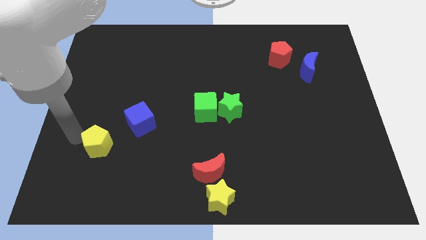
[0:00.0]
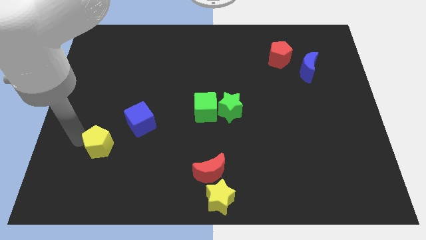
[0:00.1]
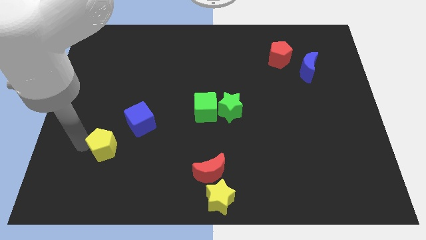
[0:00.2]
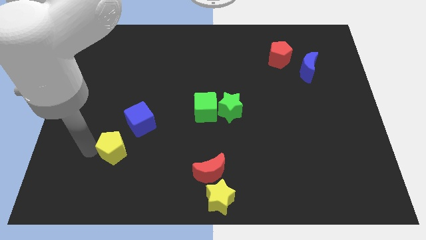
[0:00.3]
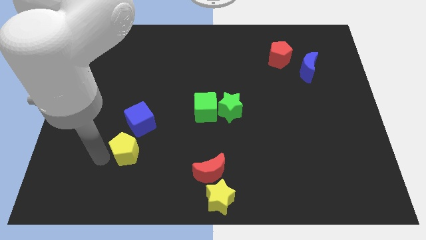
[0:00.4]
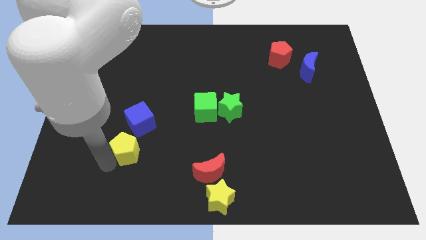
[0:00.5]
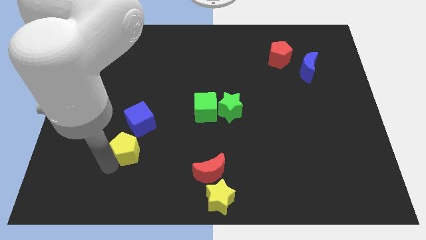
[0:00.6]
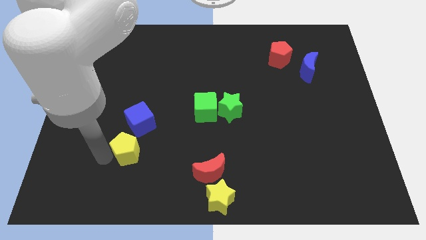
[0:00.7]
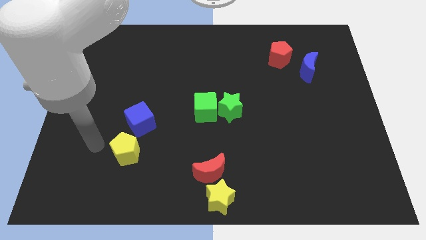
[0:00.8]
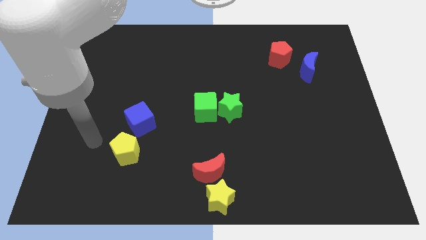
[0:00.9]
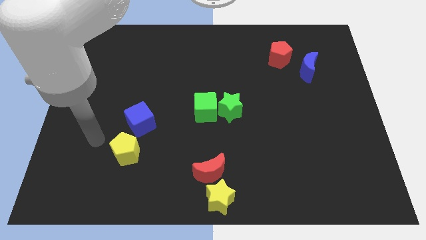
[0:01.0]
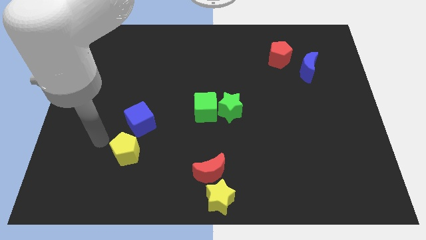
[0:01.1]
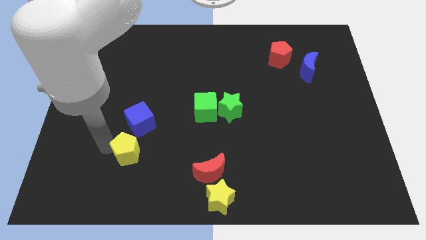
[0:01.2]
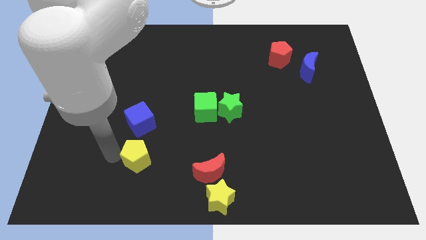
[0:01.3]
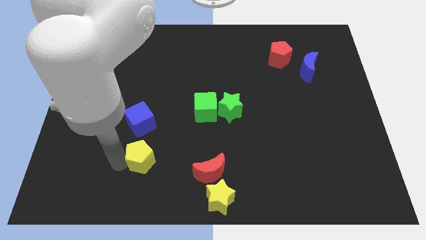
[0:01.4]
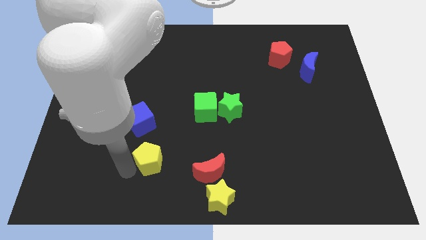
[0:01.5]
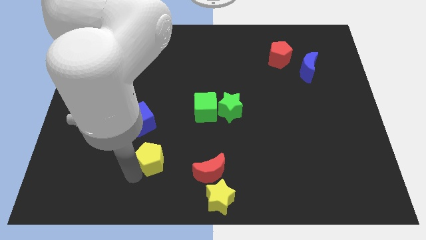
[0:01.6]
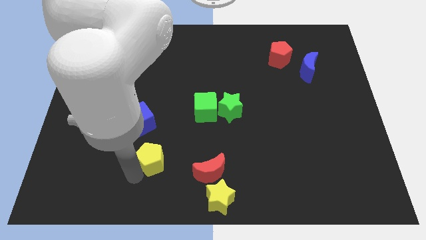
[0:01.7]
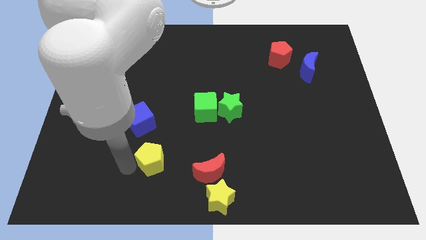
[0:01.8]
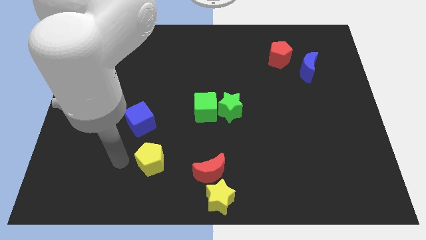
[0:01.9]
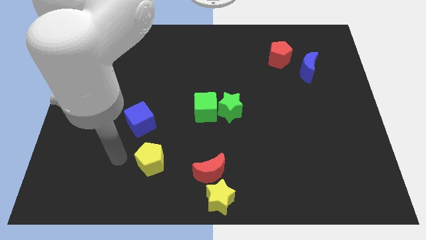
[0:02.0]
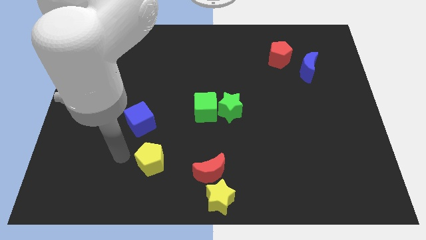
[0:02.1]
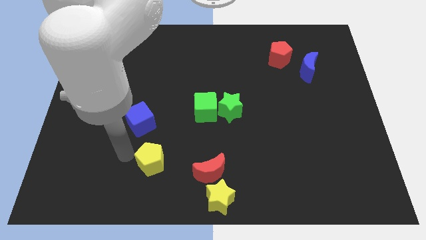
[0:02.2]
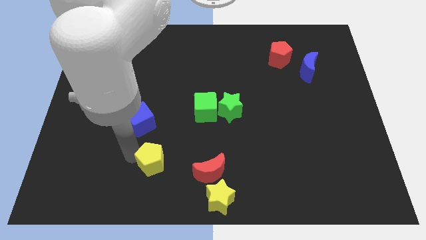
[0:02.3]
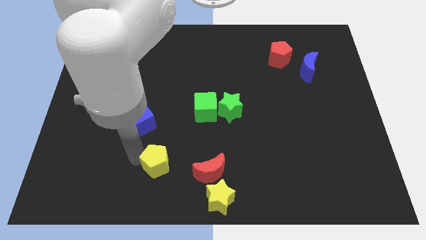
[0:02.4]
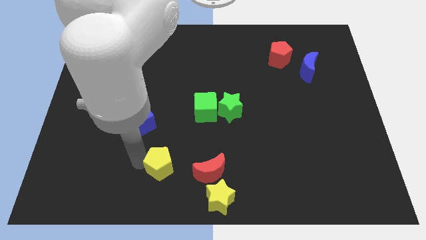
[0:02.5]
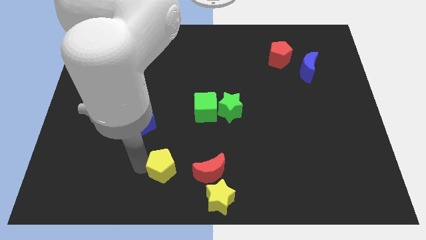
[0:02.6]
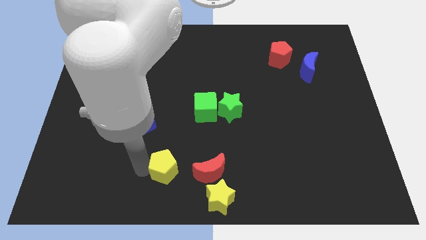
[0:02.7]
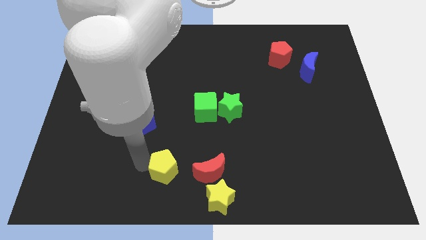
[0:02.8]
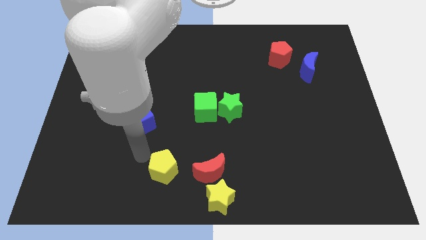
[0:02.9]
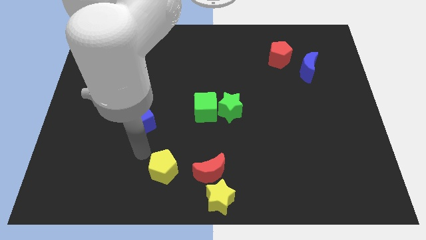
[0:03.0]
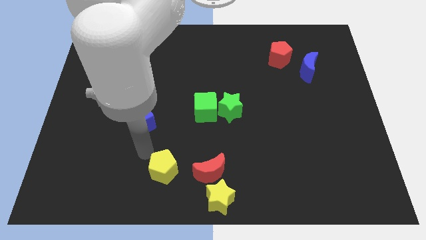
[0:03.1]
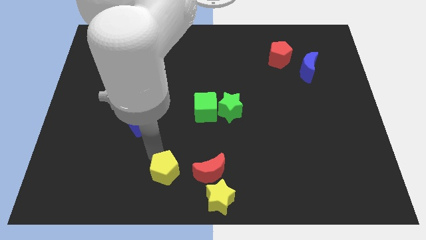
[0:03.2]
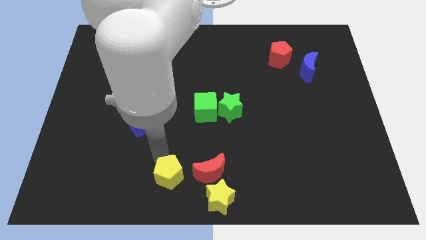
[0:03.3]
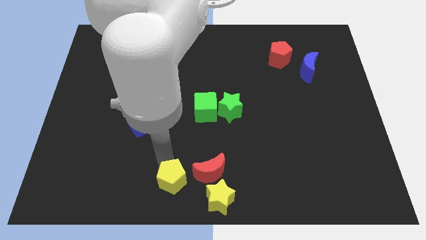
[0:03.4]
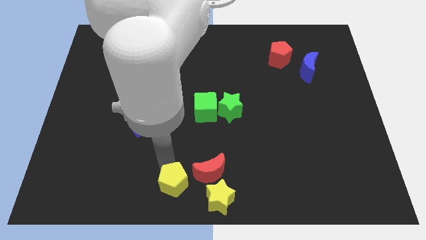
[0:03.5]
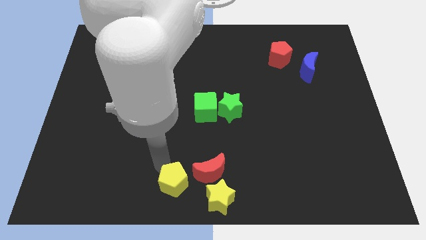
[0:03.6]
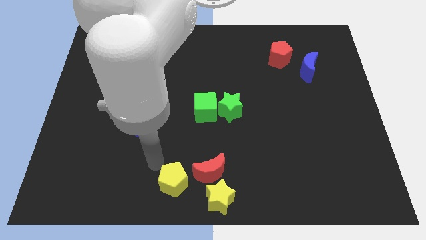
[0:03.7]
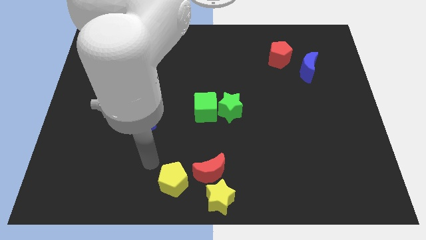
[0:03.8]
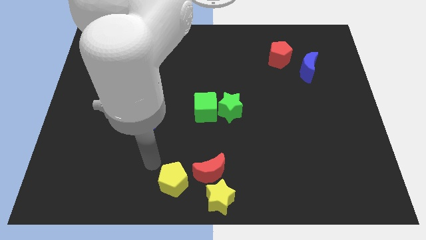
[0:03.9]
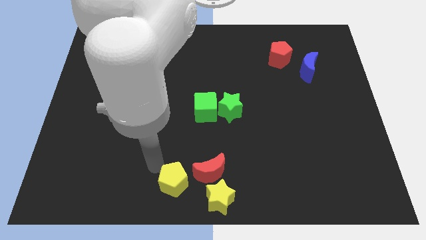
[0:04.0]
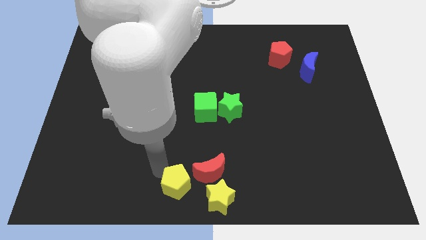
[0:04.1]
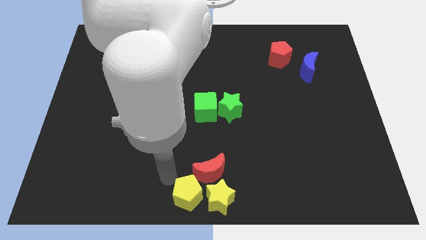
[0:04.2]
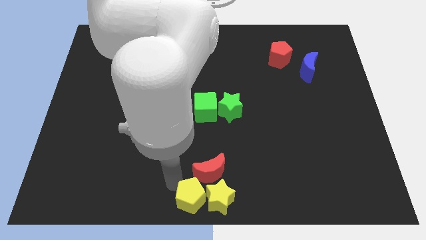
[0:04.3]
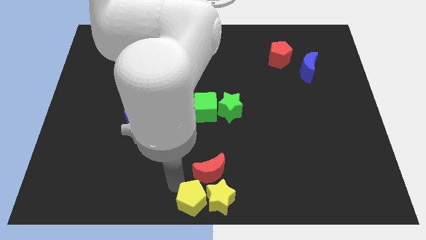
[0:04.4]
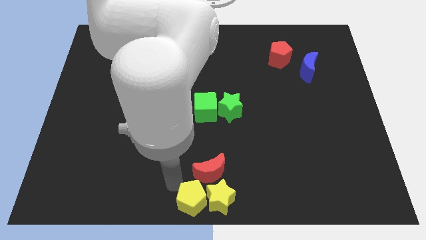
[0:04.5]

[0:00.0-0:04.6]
push the yellow pentagon into the left side of the yellow star

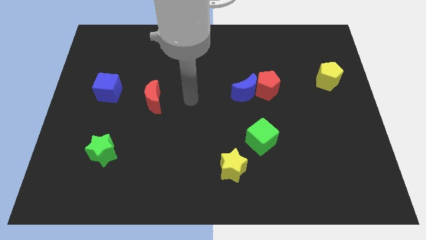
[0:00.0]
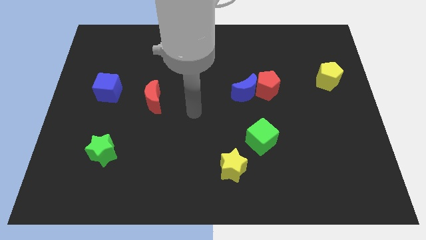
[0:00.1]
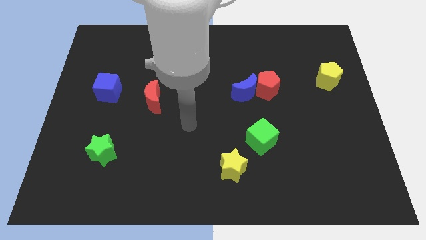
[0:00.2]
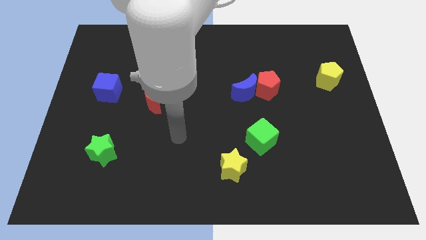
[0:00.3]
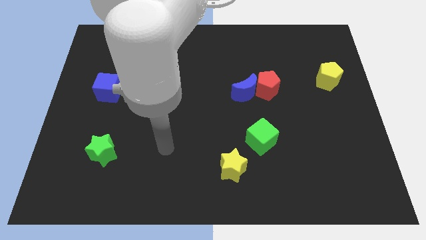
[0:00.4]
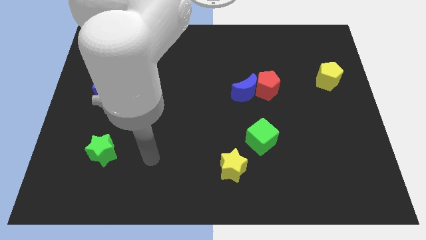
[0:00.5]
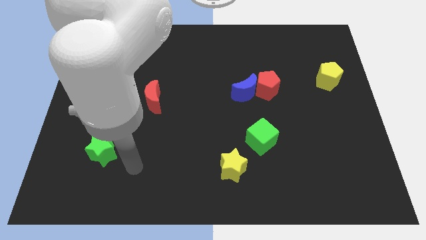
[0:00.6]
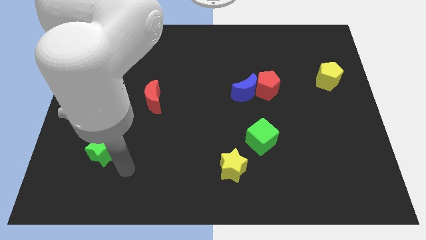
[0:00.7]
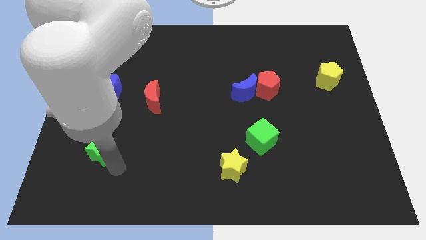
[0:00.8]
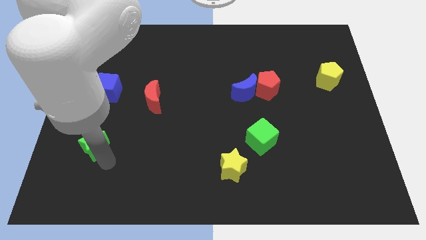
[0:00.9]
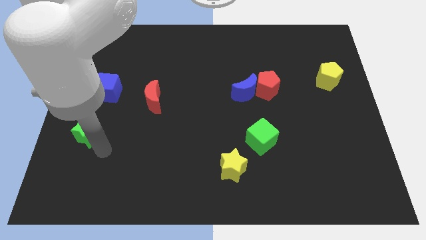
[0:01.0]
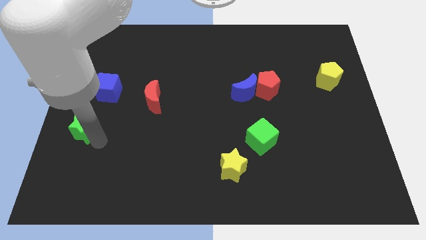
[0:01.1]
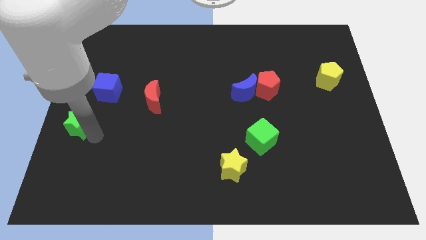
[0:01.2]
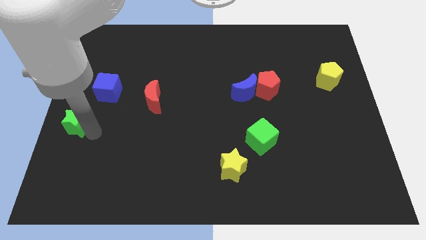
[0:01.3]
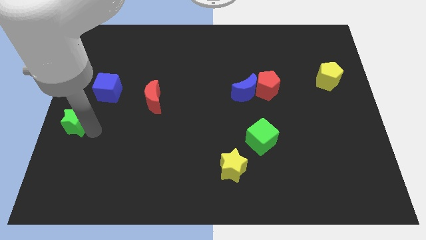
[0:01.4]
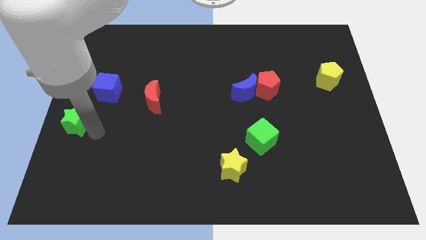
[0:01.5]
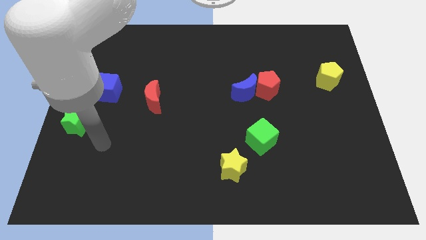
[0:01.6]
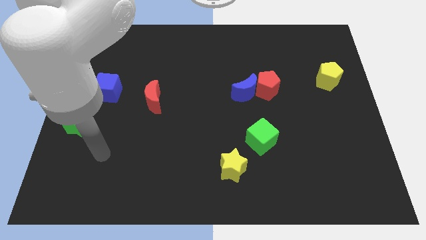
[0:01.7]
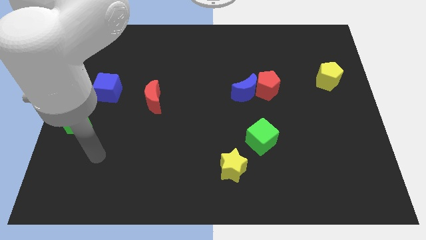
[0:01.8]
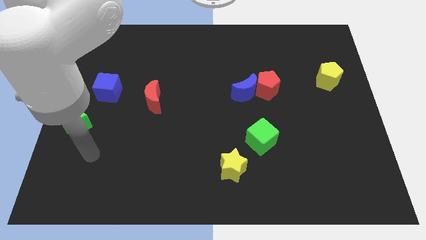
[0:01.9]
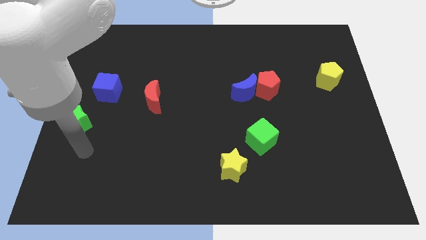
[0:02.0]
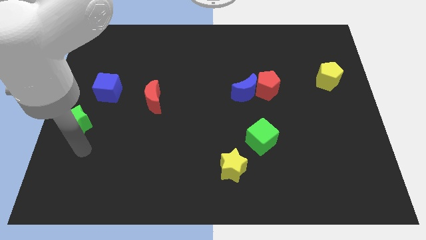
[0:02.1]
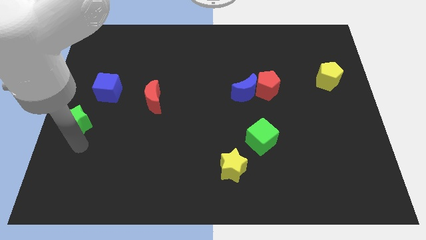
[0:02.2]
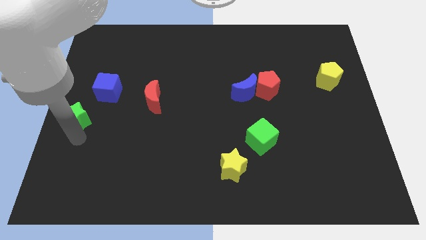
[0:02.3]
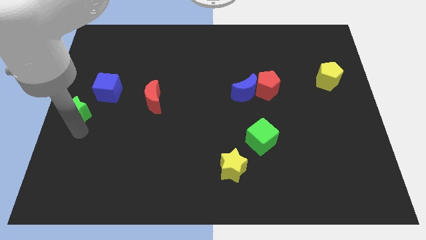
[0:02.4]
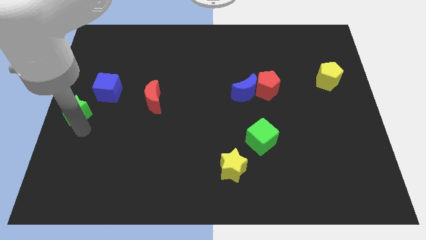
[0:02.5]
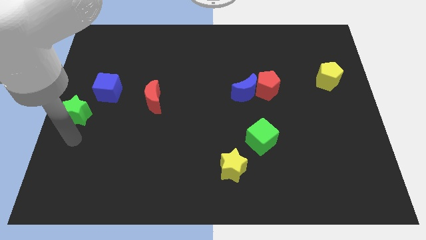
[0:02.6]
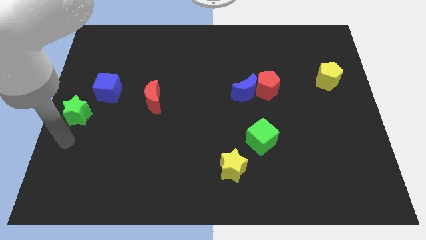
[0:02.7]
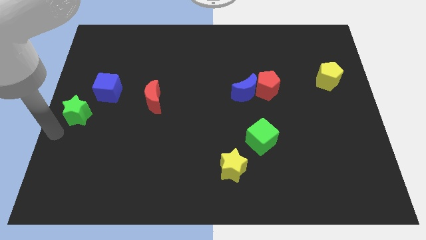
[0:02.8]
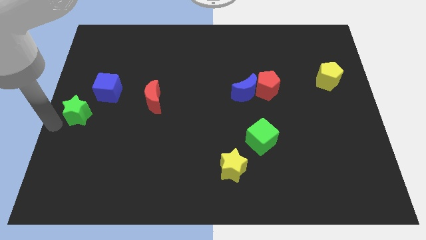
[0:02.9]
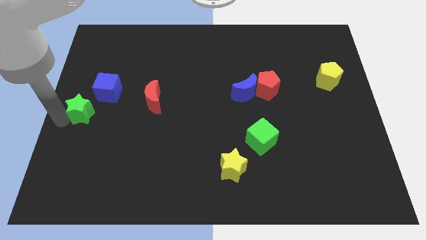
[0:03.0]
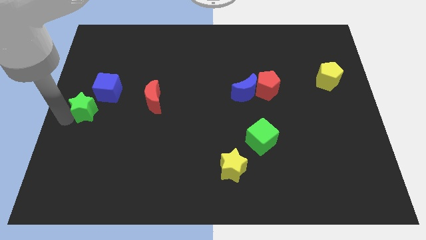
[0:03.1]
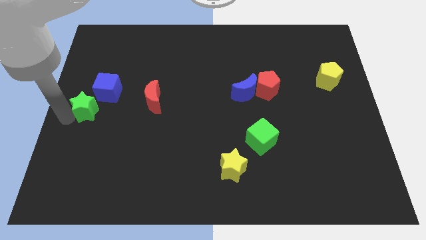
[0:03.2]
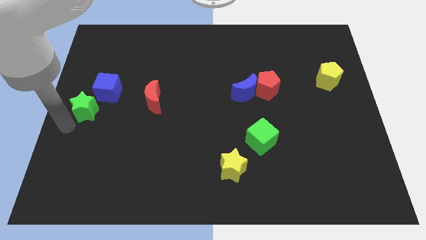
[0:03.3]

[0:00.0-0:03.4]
place the green star close to the blue cube

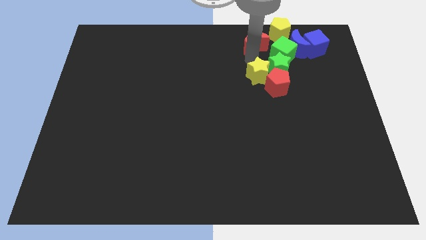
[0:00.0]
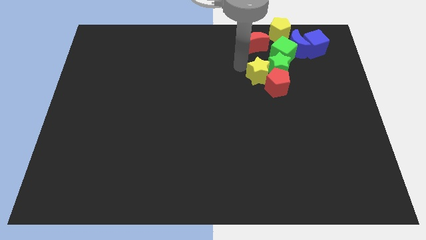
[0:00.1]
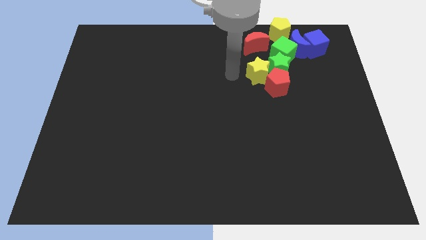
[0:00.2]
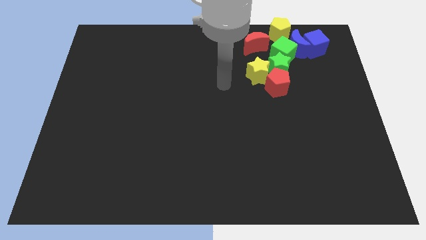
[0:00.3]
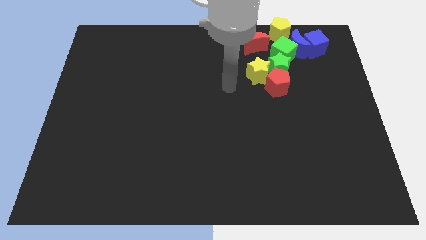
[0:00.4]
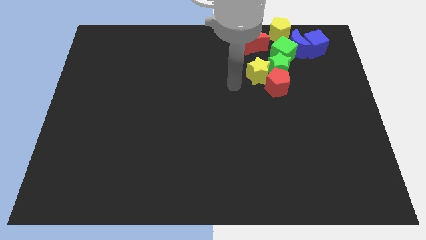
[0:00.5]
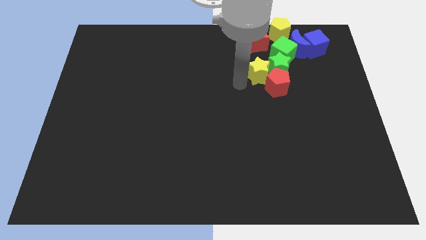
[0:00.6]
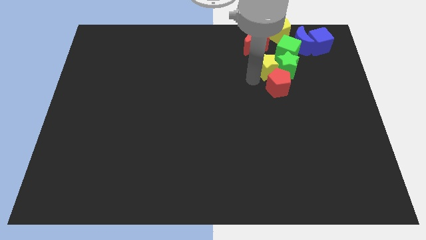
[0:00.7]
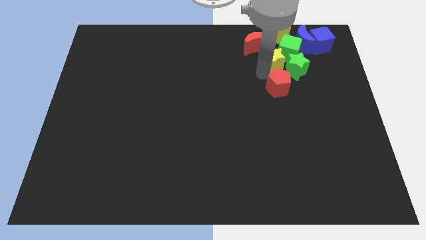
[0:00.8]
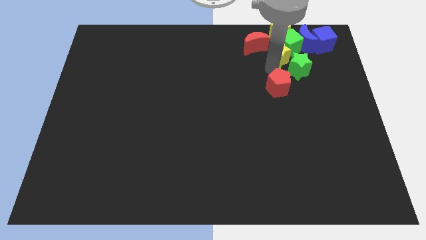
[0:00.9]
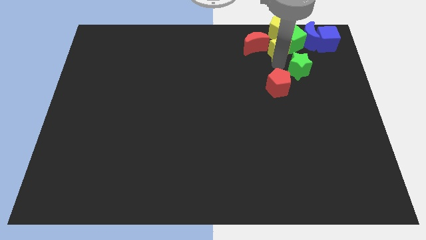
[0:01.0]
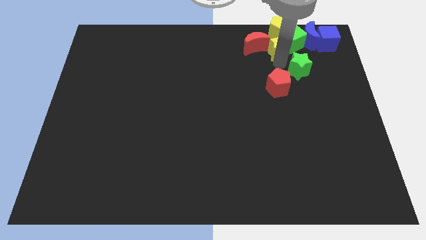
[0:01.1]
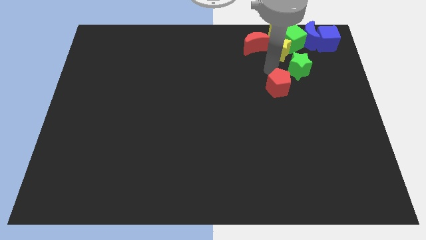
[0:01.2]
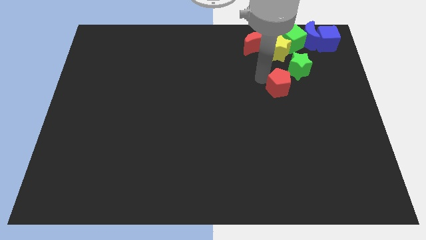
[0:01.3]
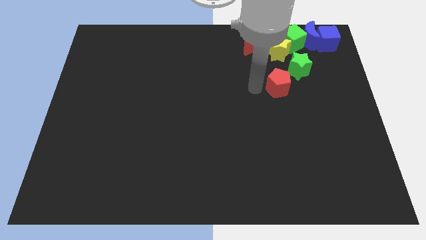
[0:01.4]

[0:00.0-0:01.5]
move the yellow star to the left of the green cube
